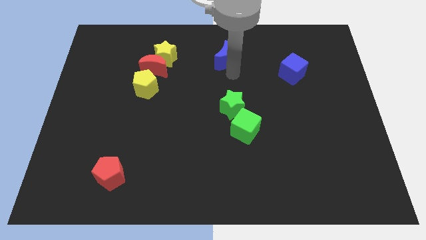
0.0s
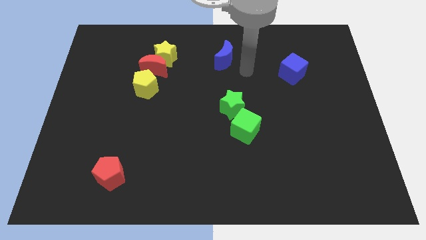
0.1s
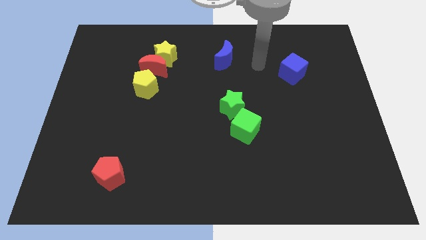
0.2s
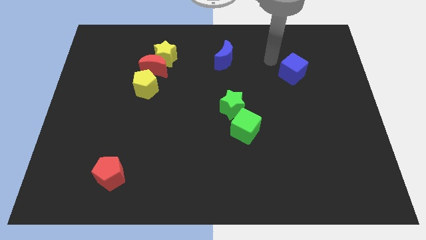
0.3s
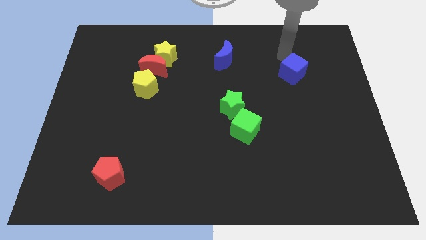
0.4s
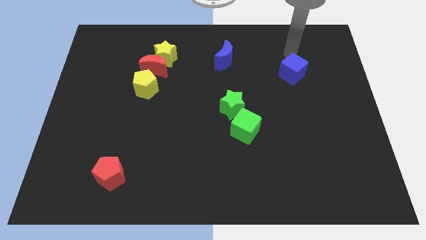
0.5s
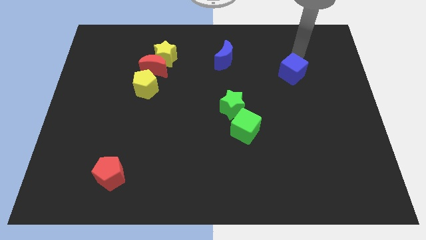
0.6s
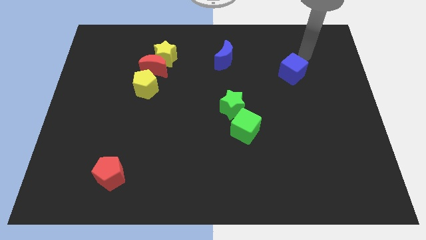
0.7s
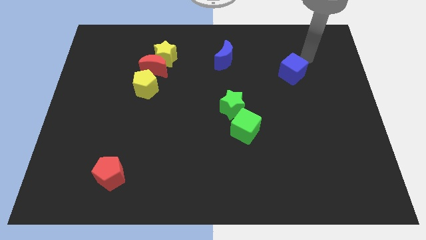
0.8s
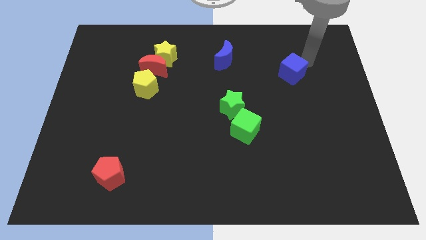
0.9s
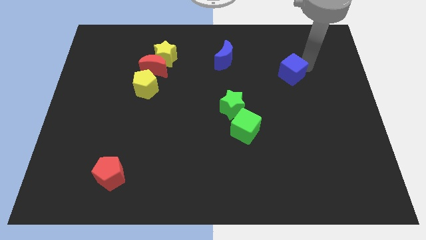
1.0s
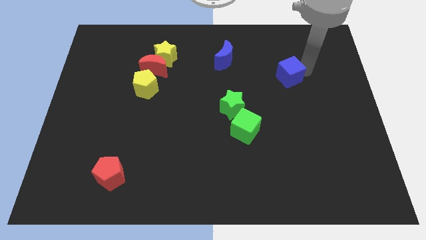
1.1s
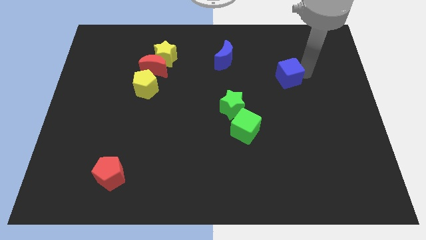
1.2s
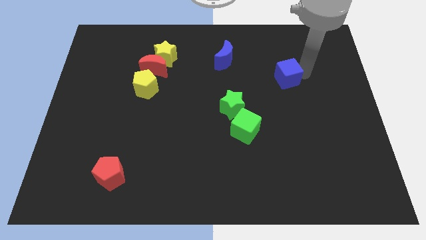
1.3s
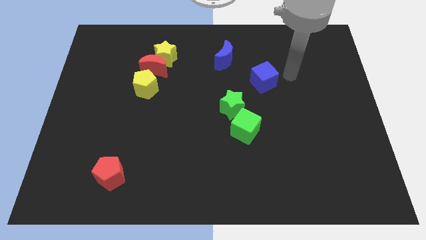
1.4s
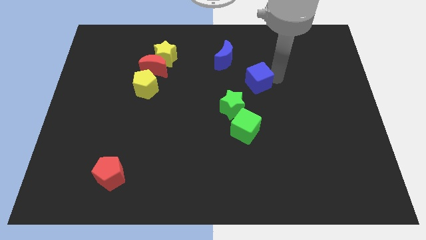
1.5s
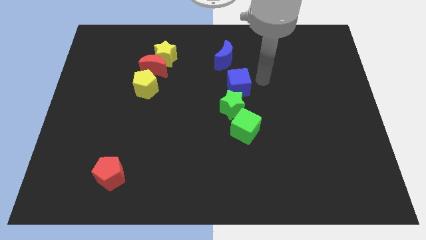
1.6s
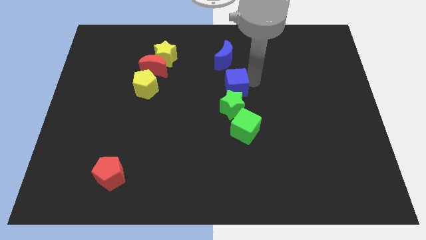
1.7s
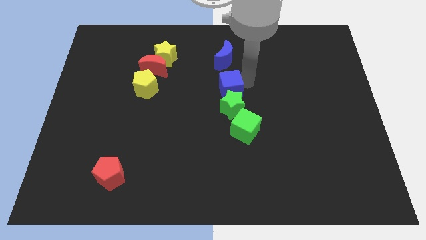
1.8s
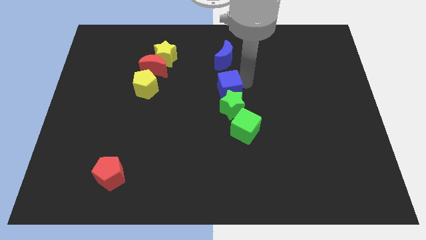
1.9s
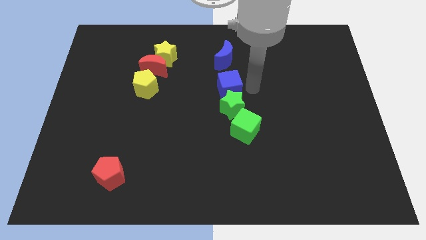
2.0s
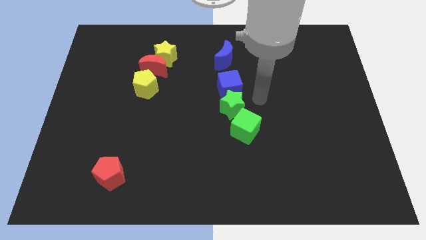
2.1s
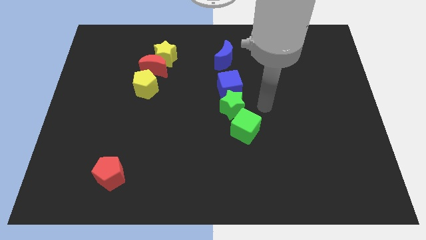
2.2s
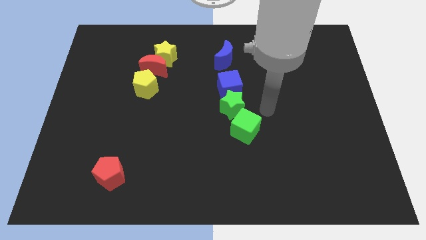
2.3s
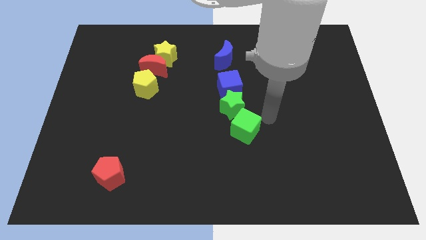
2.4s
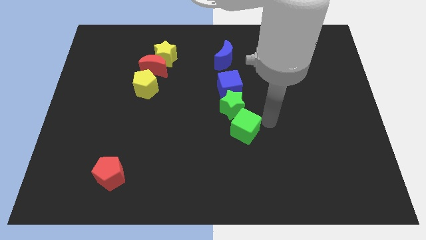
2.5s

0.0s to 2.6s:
push the blue cube above the green star

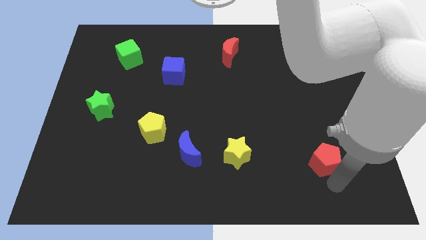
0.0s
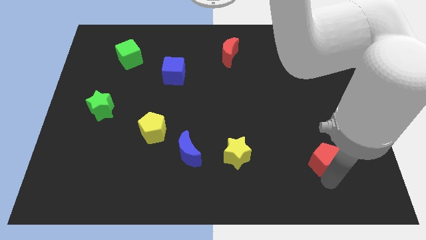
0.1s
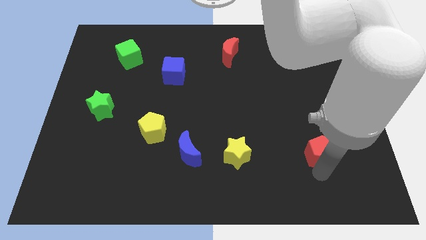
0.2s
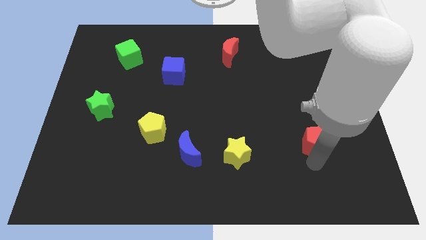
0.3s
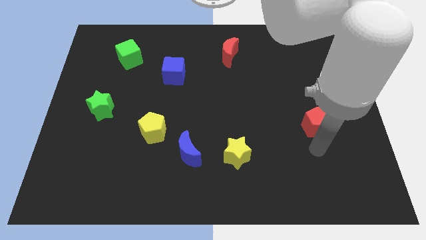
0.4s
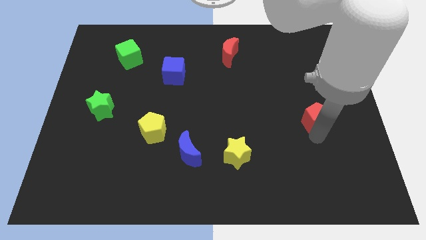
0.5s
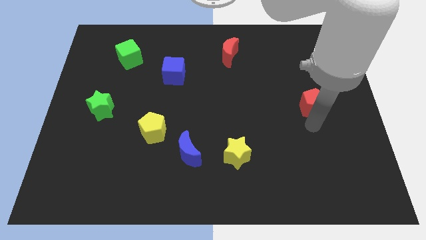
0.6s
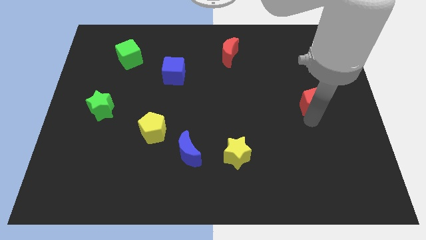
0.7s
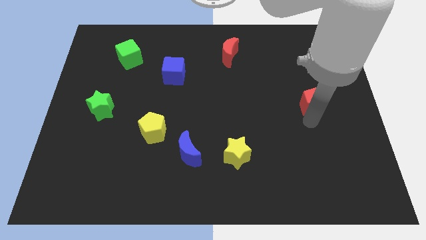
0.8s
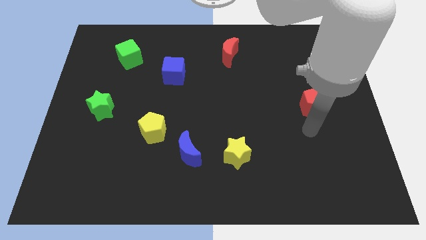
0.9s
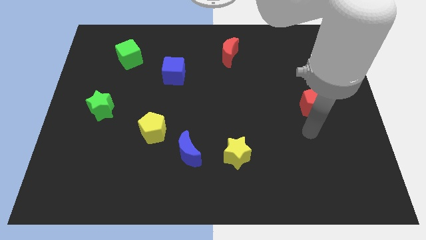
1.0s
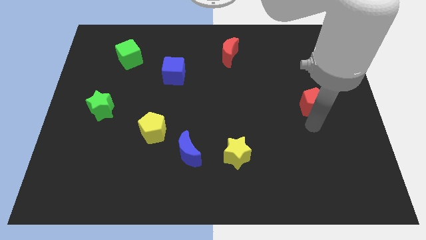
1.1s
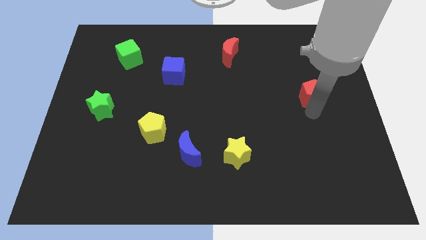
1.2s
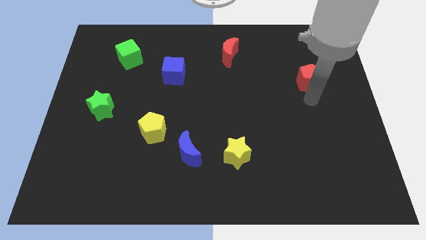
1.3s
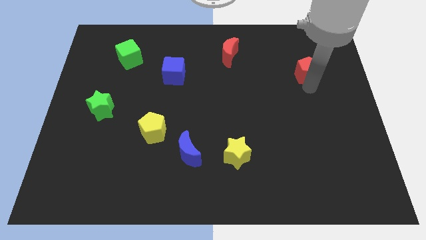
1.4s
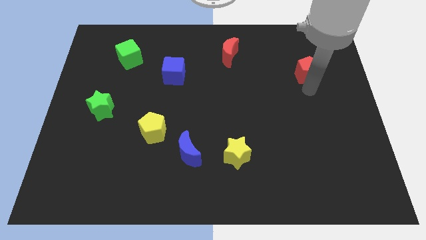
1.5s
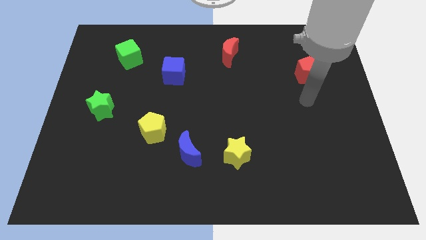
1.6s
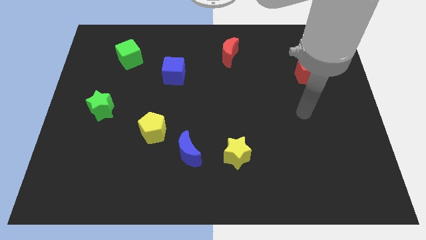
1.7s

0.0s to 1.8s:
push the red pentagon diaonally top right to the yellow star

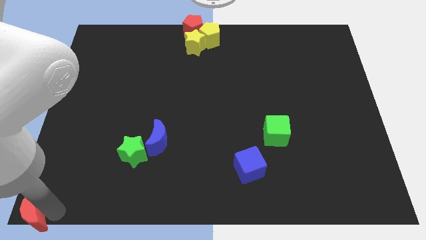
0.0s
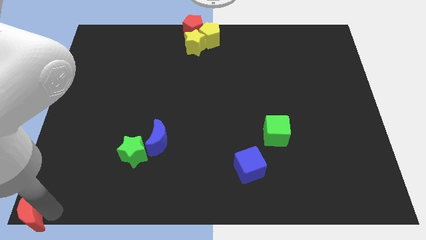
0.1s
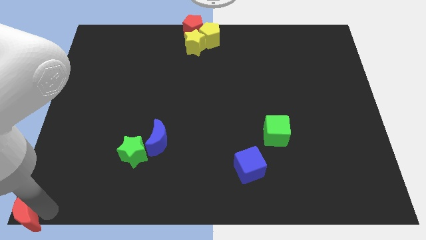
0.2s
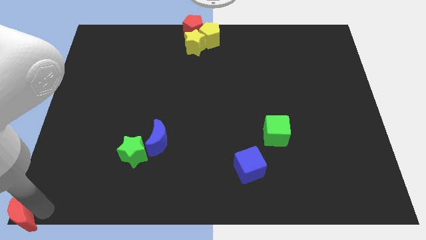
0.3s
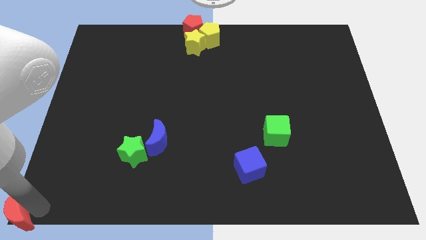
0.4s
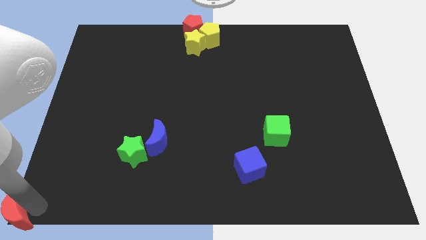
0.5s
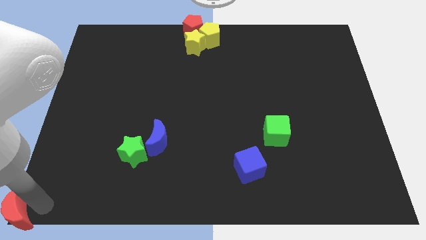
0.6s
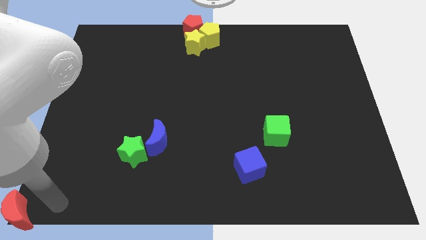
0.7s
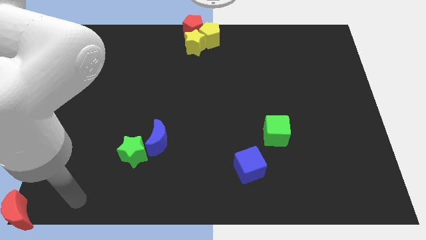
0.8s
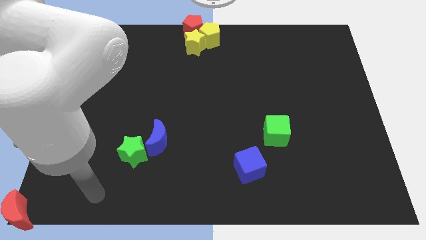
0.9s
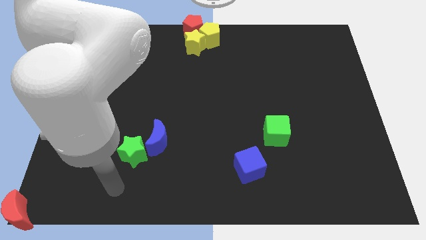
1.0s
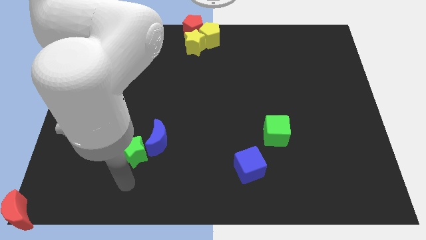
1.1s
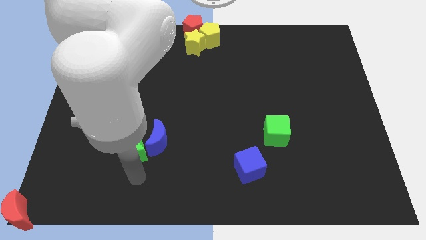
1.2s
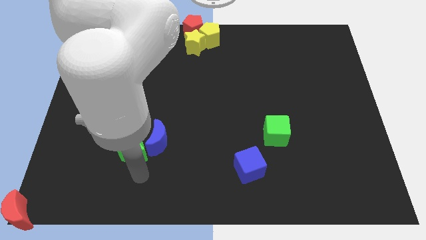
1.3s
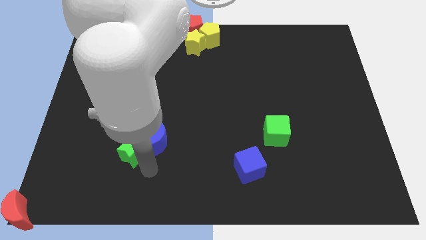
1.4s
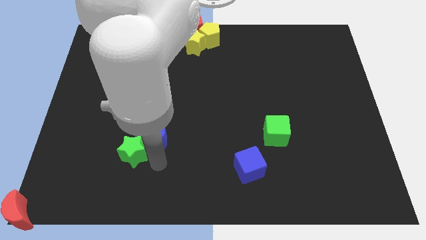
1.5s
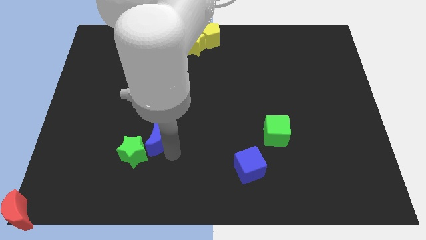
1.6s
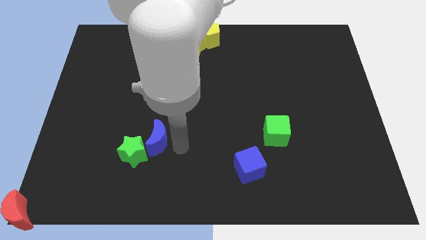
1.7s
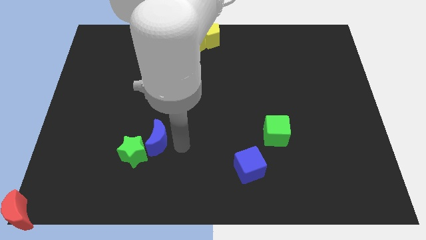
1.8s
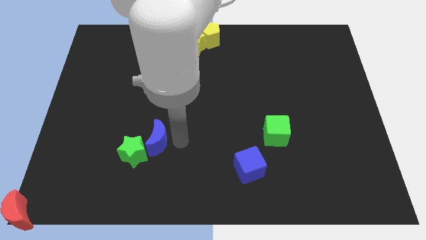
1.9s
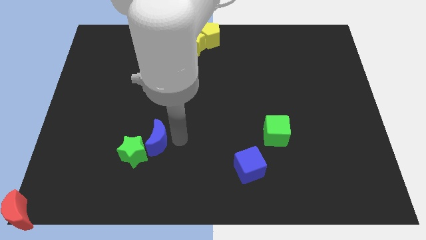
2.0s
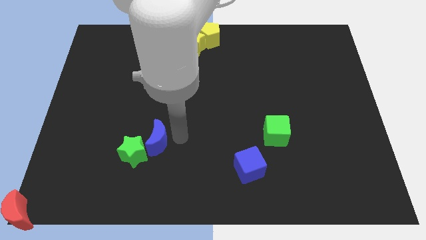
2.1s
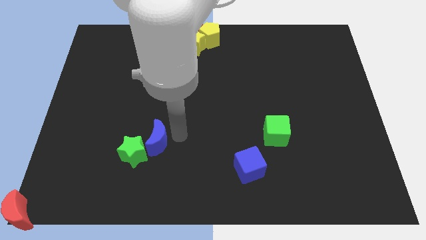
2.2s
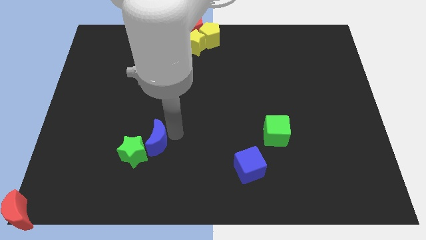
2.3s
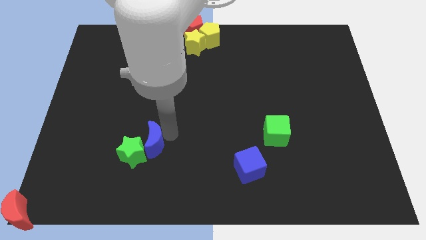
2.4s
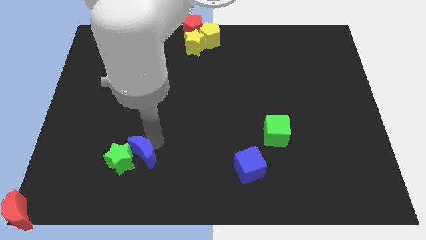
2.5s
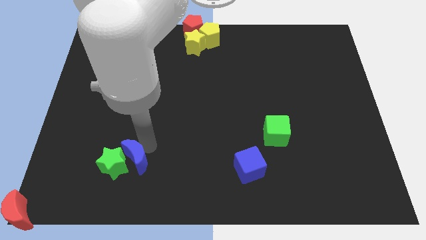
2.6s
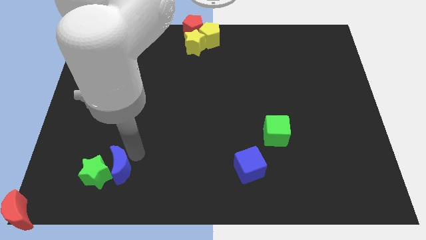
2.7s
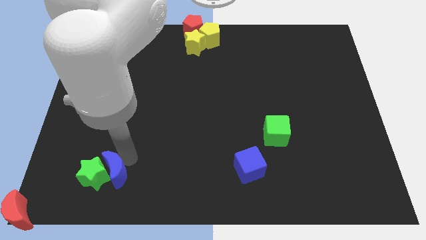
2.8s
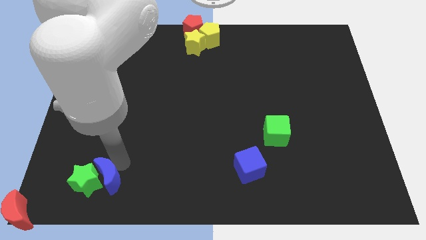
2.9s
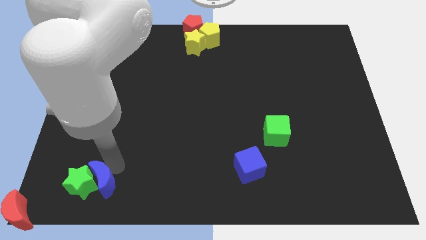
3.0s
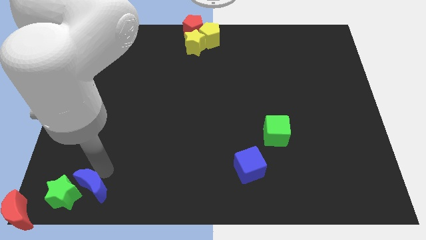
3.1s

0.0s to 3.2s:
move green star along with the blue moon towards the bottom left

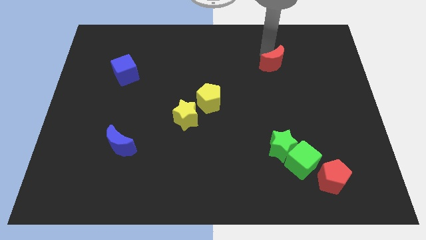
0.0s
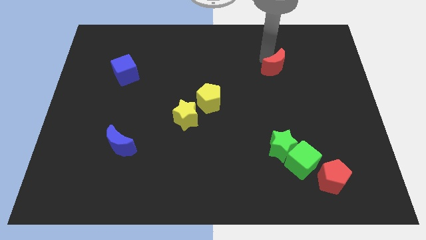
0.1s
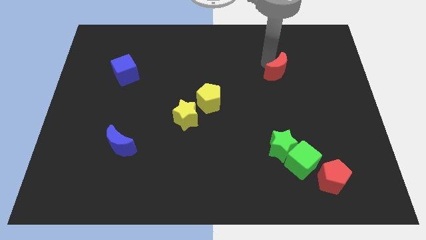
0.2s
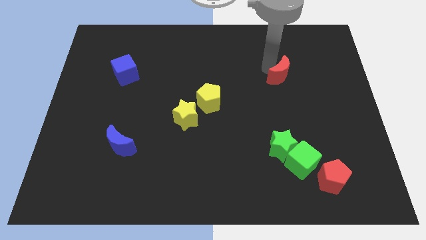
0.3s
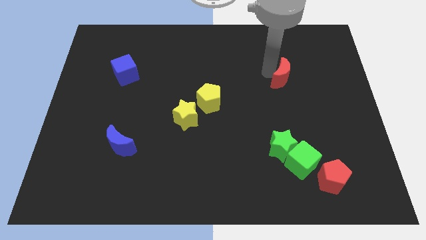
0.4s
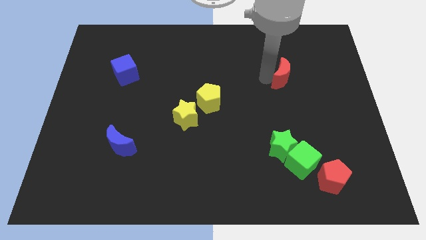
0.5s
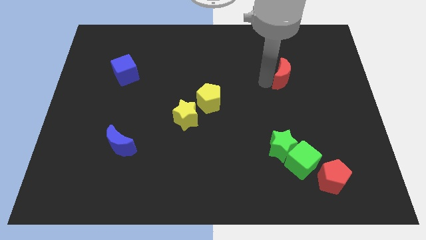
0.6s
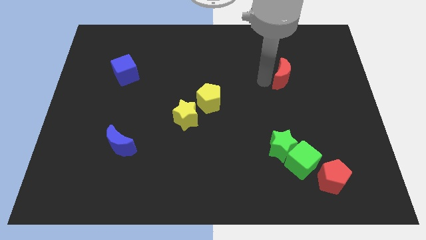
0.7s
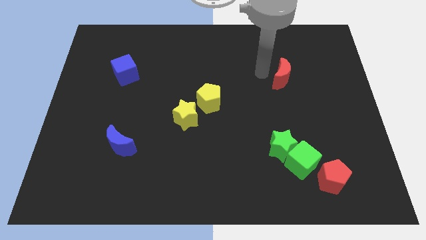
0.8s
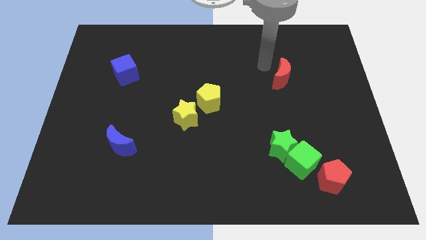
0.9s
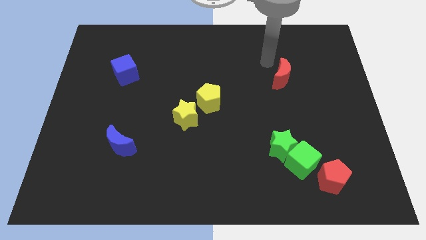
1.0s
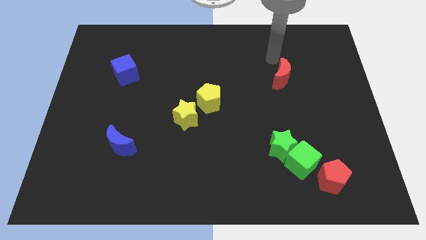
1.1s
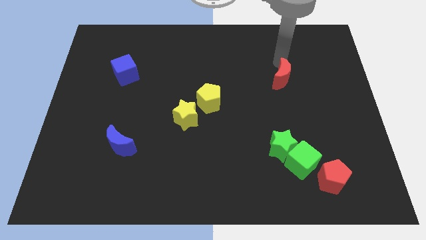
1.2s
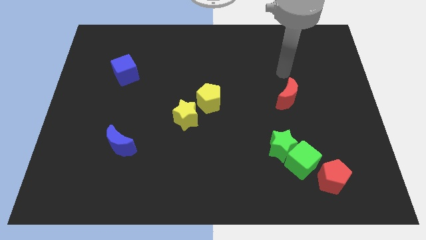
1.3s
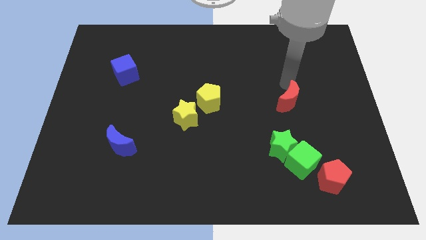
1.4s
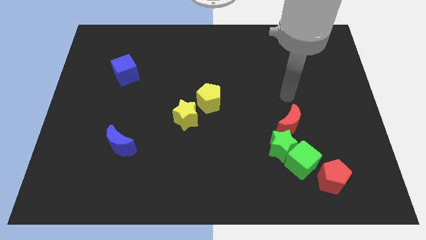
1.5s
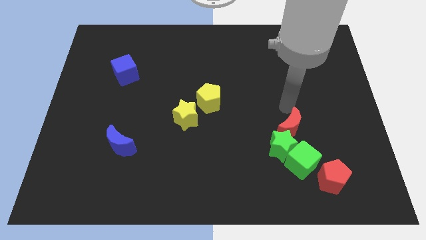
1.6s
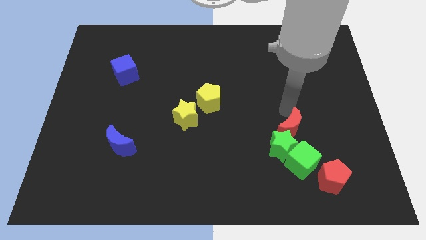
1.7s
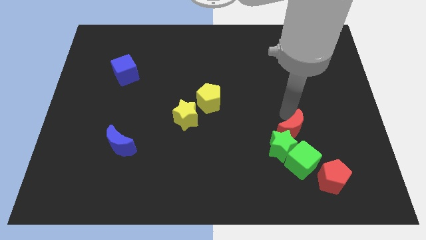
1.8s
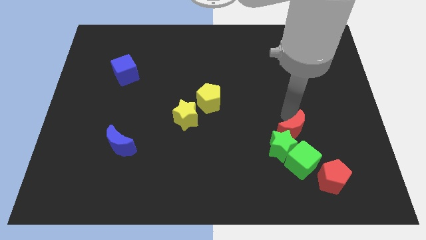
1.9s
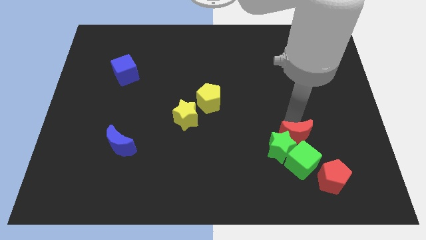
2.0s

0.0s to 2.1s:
move red moon to the top right of green star
